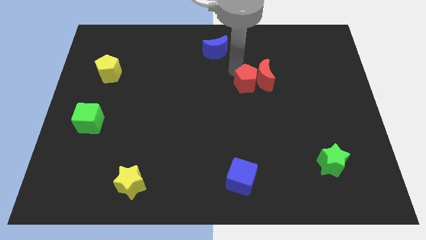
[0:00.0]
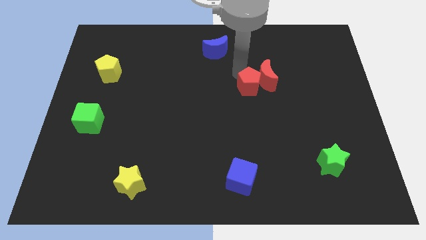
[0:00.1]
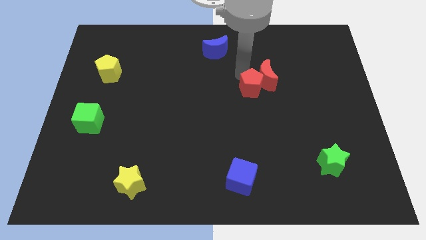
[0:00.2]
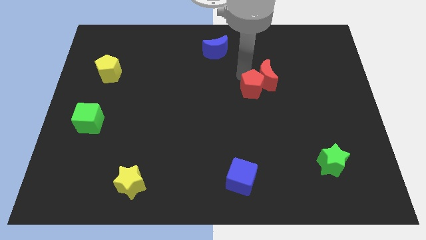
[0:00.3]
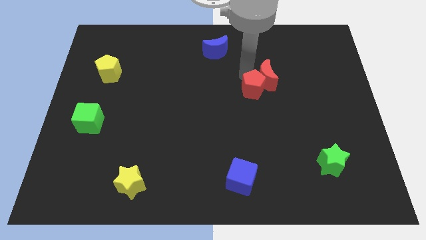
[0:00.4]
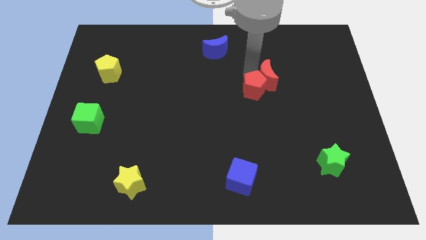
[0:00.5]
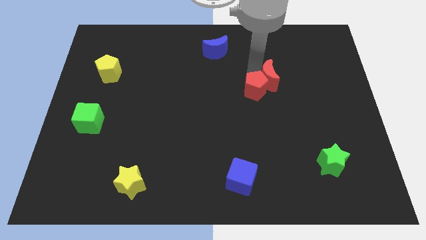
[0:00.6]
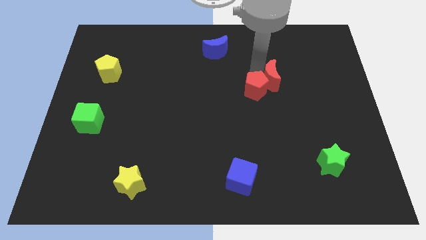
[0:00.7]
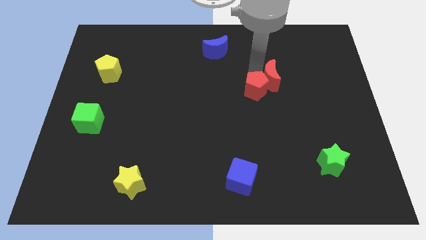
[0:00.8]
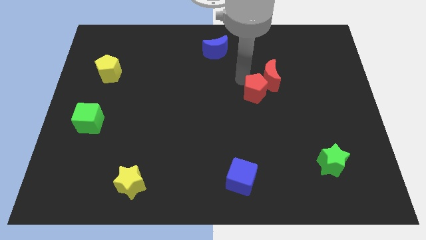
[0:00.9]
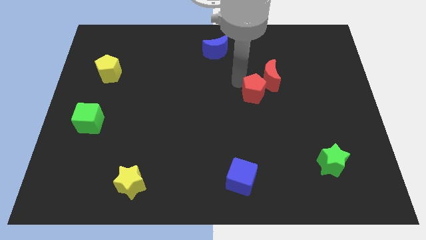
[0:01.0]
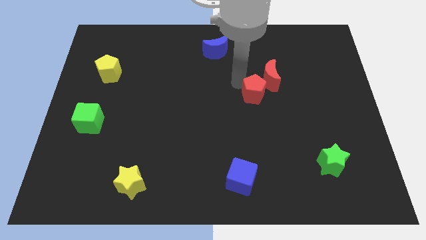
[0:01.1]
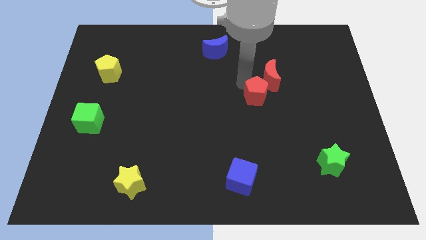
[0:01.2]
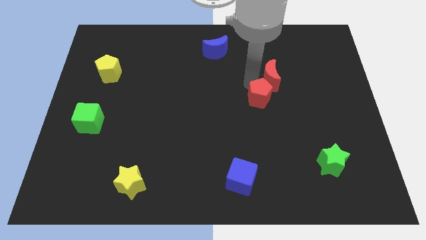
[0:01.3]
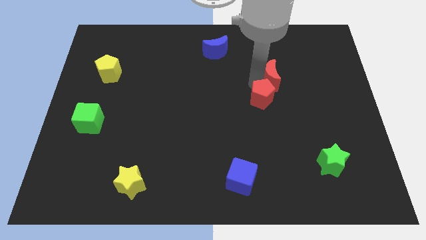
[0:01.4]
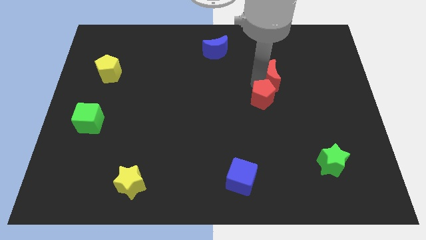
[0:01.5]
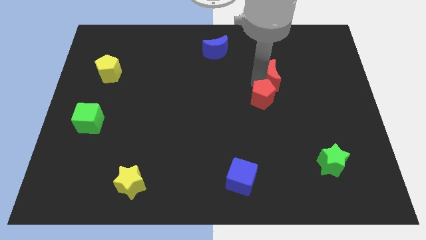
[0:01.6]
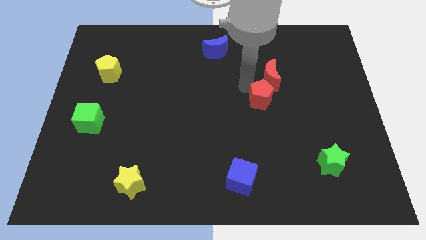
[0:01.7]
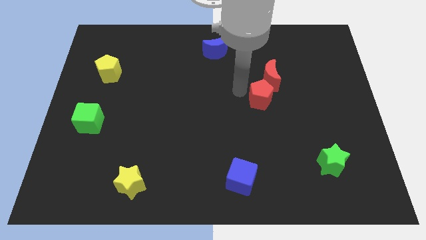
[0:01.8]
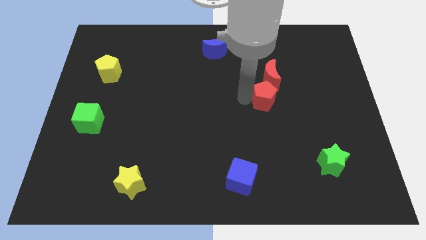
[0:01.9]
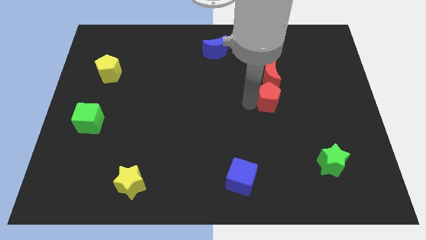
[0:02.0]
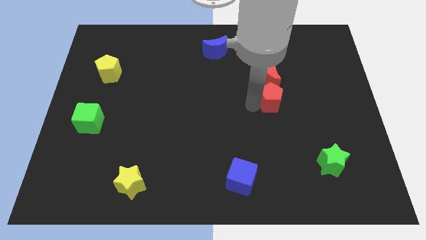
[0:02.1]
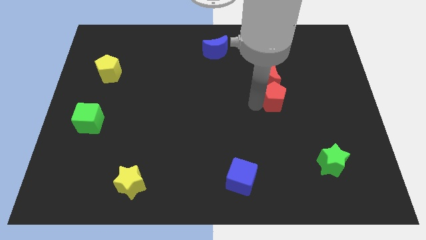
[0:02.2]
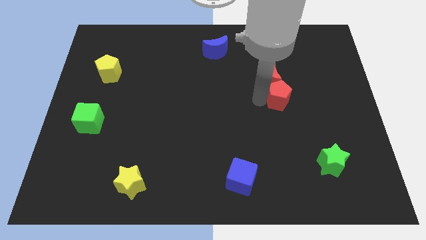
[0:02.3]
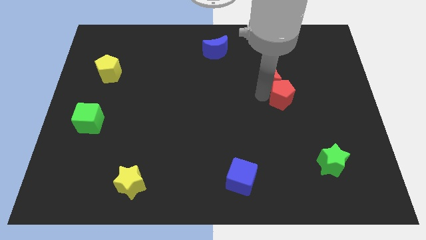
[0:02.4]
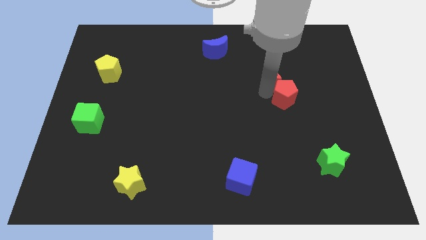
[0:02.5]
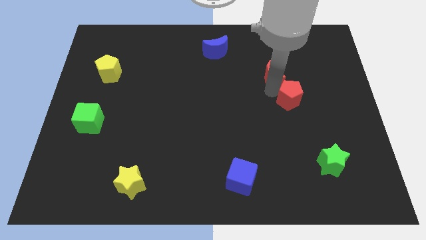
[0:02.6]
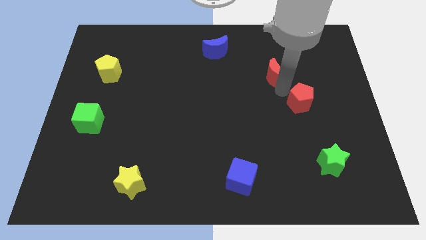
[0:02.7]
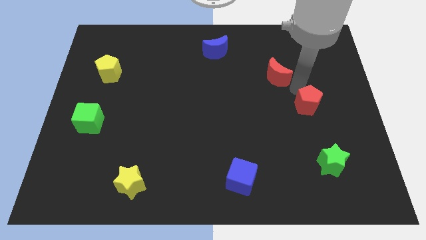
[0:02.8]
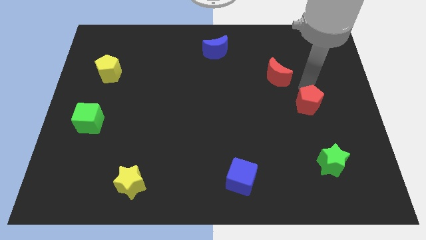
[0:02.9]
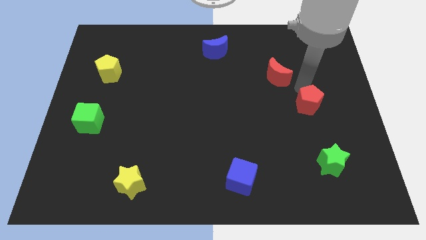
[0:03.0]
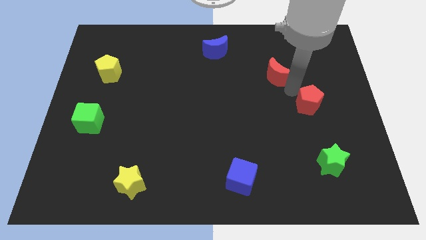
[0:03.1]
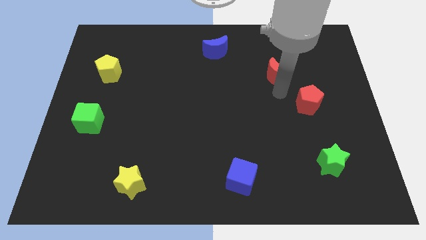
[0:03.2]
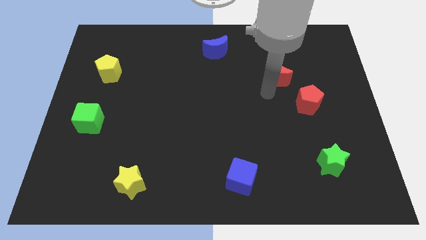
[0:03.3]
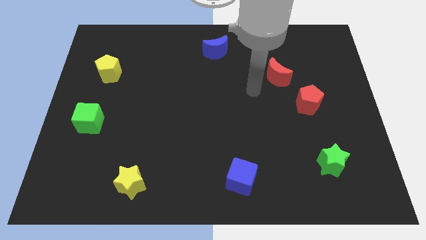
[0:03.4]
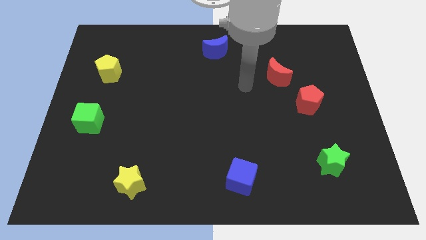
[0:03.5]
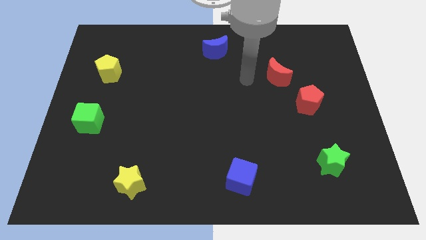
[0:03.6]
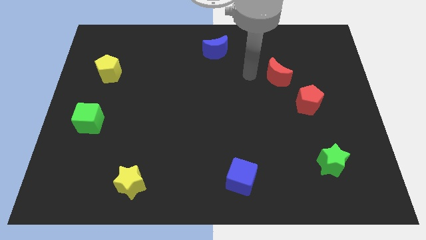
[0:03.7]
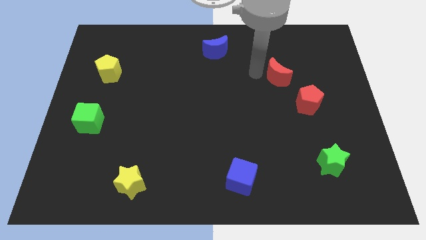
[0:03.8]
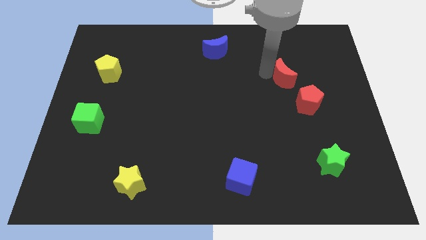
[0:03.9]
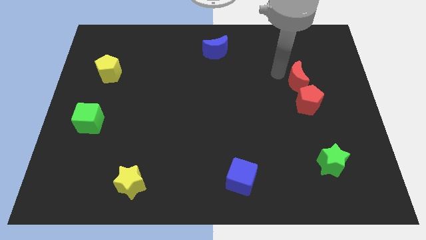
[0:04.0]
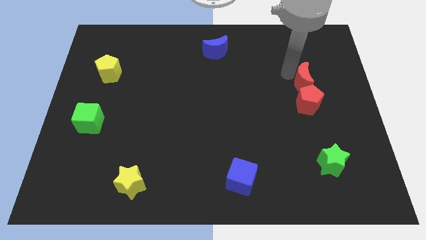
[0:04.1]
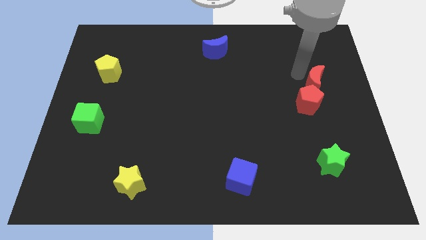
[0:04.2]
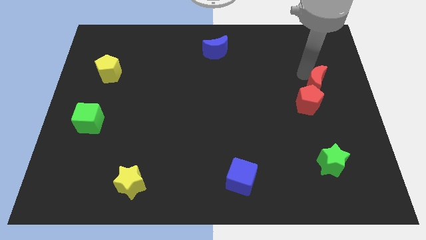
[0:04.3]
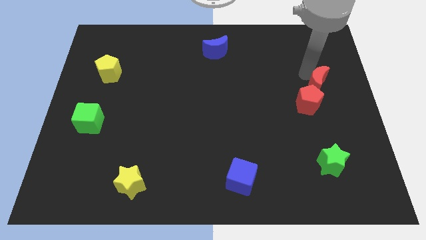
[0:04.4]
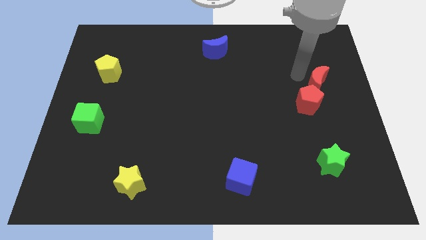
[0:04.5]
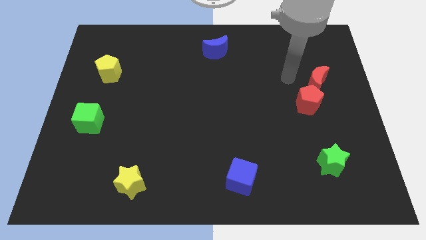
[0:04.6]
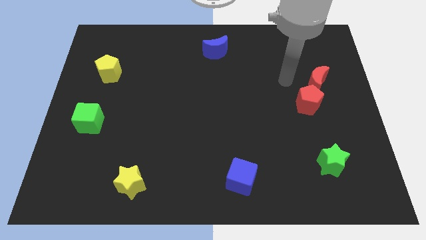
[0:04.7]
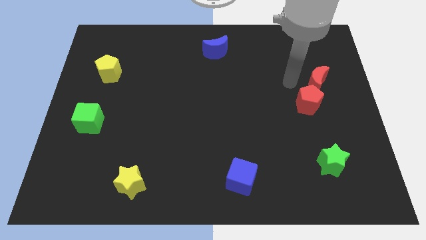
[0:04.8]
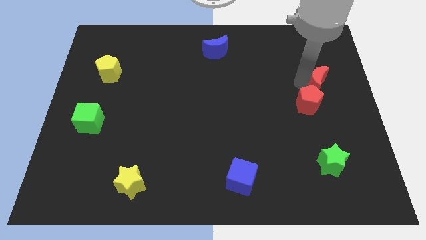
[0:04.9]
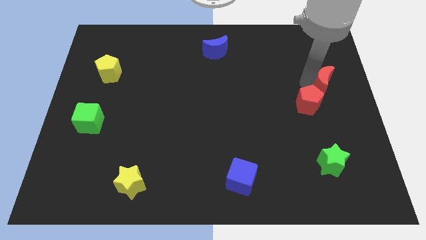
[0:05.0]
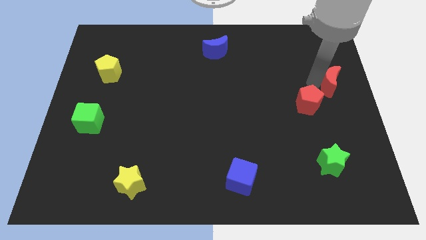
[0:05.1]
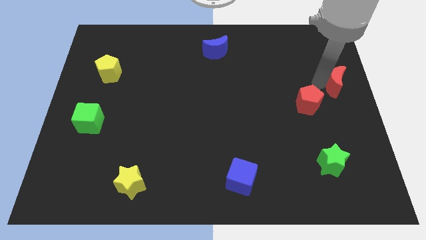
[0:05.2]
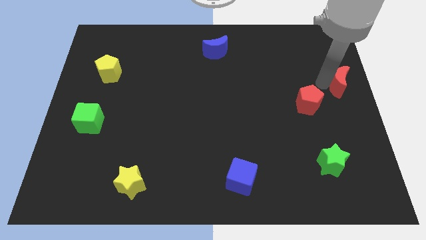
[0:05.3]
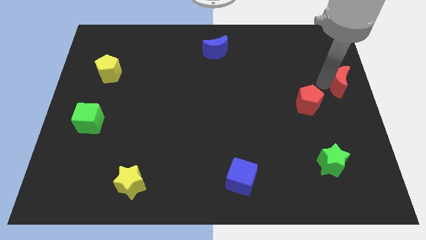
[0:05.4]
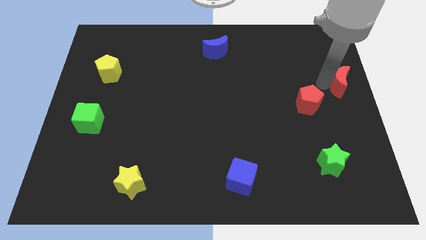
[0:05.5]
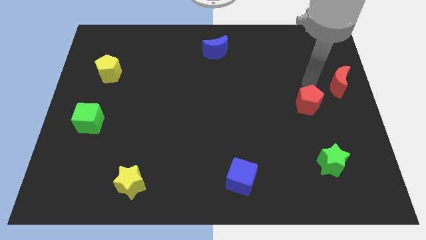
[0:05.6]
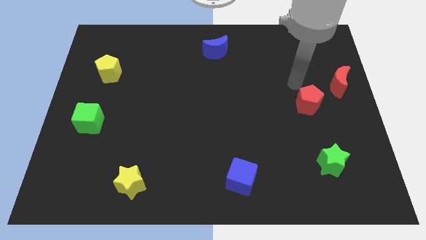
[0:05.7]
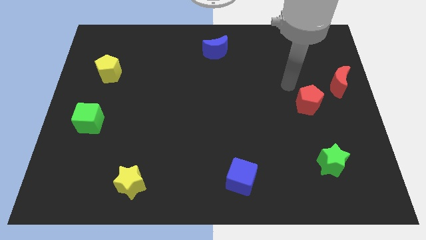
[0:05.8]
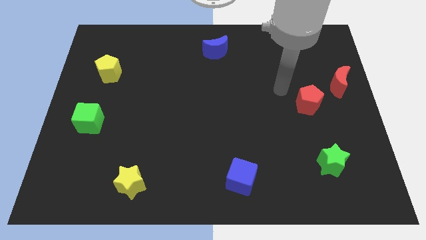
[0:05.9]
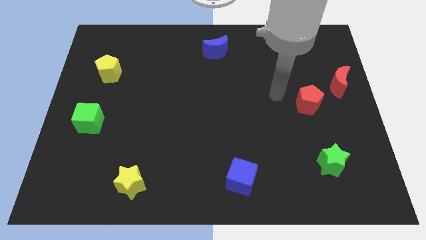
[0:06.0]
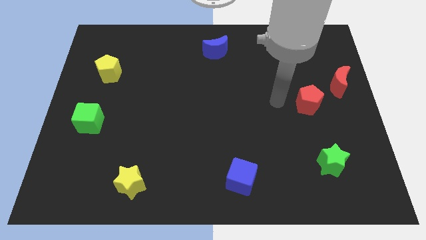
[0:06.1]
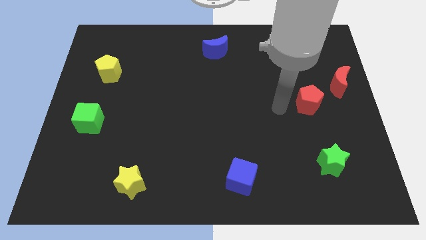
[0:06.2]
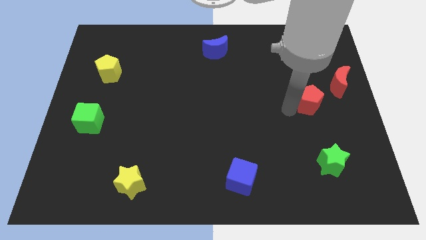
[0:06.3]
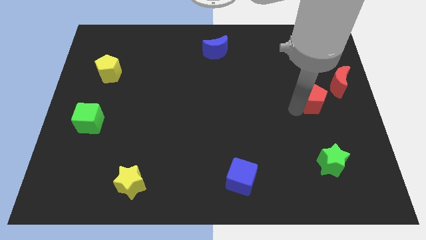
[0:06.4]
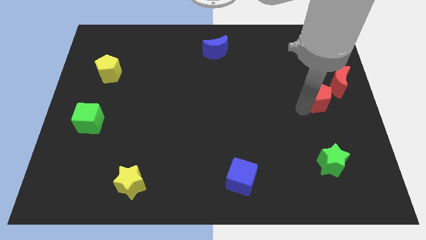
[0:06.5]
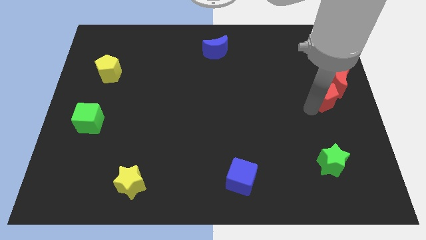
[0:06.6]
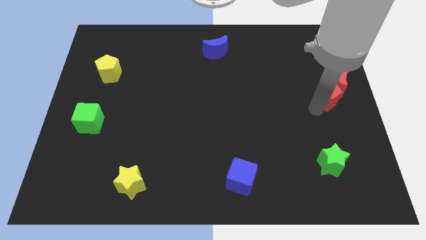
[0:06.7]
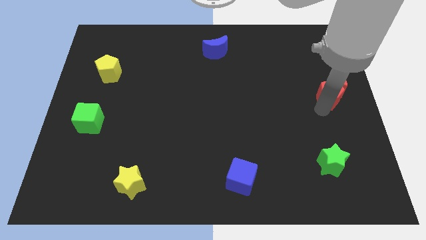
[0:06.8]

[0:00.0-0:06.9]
push the red blocks to the center right

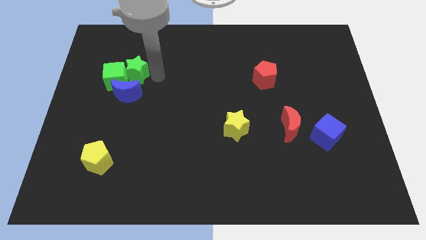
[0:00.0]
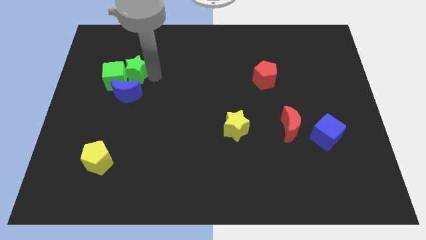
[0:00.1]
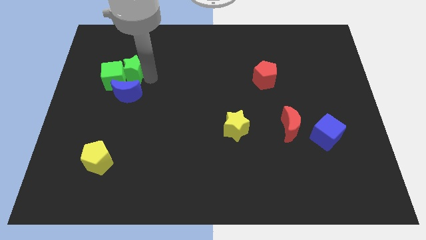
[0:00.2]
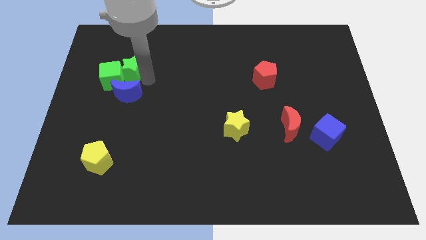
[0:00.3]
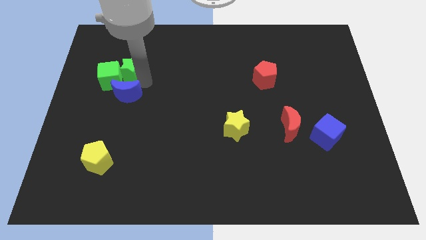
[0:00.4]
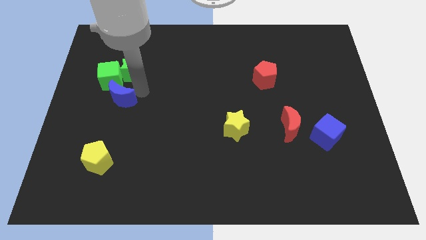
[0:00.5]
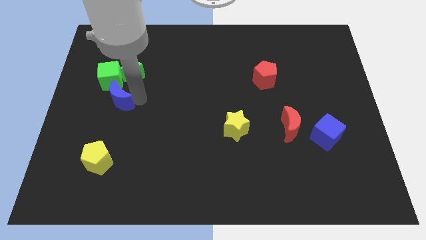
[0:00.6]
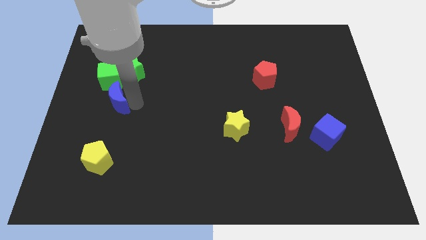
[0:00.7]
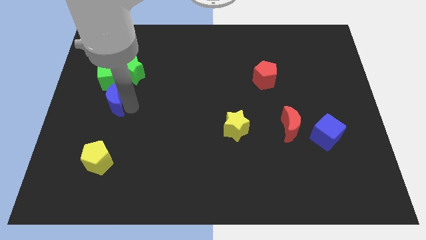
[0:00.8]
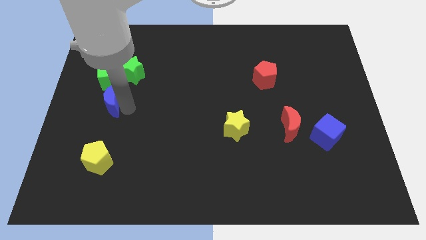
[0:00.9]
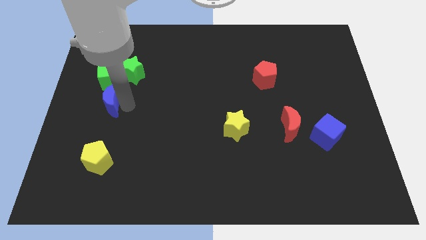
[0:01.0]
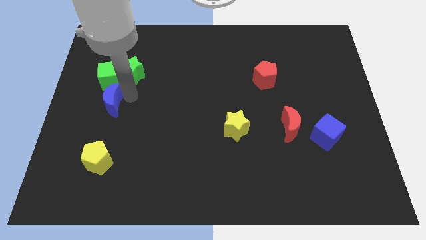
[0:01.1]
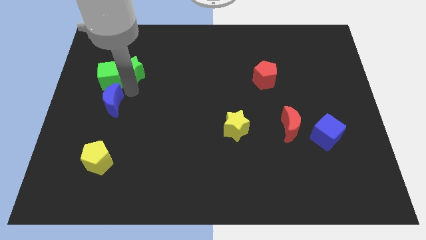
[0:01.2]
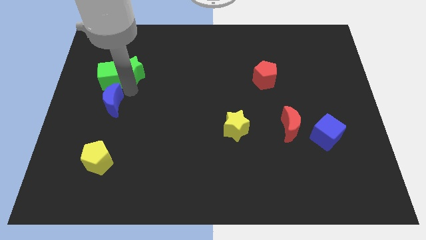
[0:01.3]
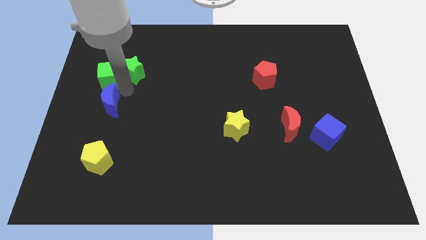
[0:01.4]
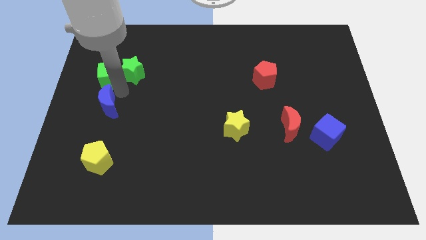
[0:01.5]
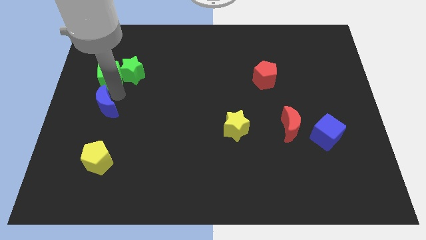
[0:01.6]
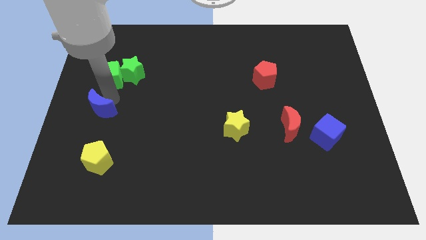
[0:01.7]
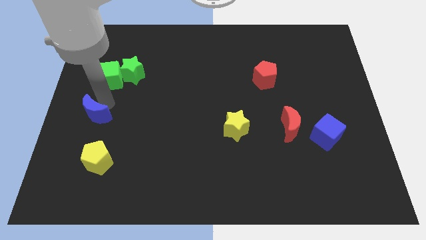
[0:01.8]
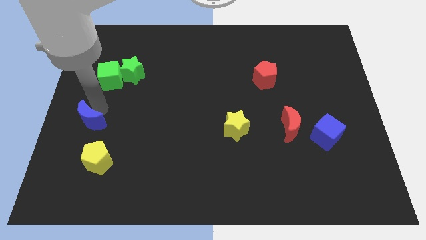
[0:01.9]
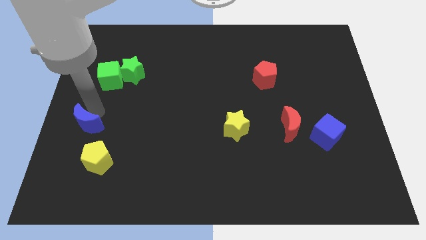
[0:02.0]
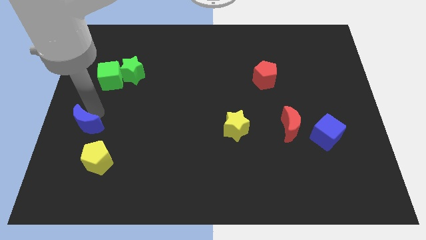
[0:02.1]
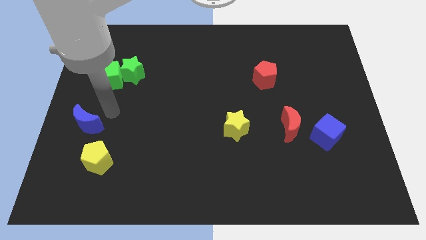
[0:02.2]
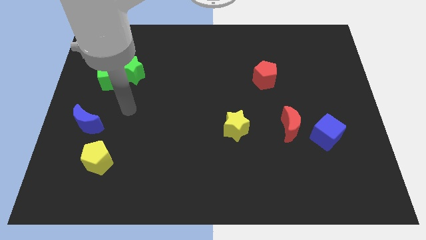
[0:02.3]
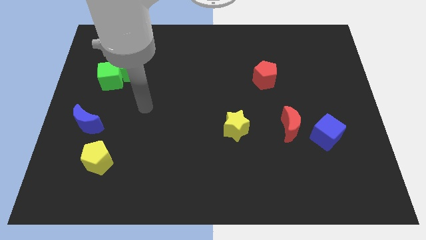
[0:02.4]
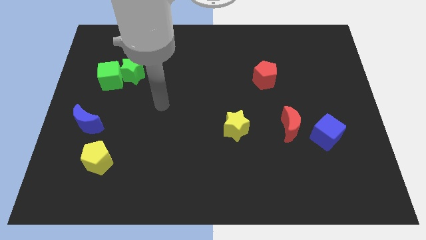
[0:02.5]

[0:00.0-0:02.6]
place the blue moon in between the green cube and yellow pentagon
